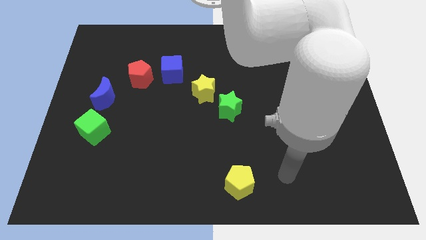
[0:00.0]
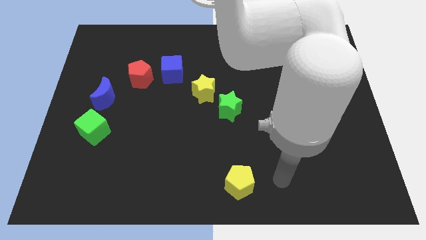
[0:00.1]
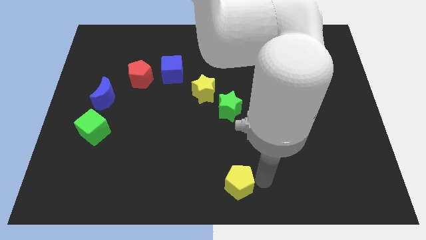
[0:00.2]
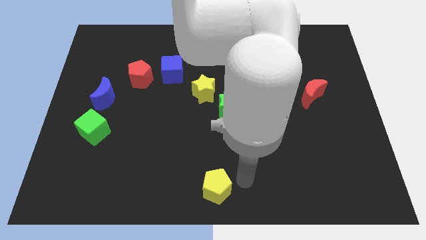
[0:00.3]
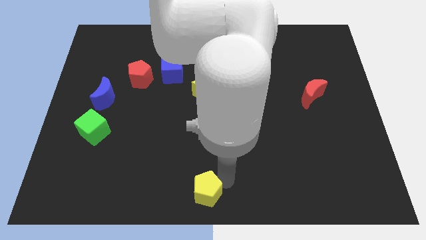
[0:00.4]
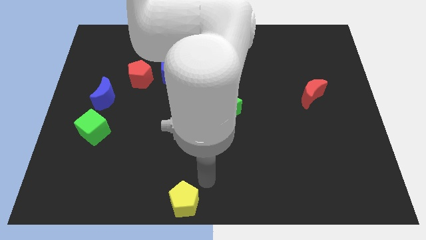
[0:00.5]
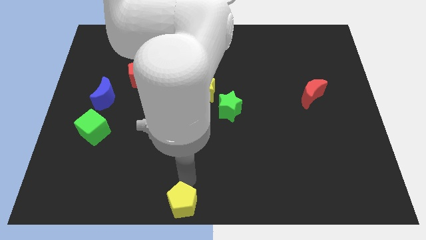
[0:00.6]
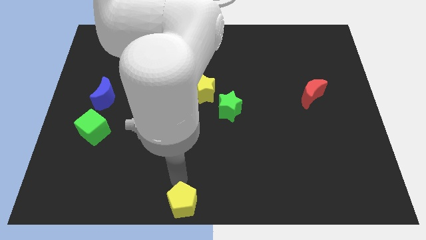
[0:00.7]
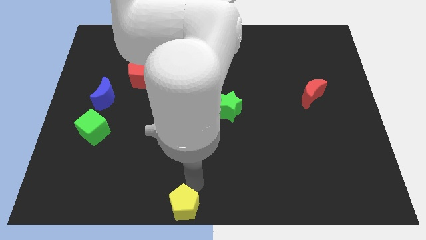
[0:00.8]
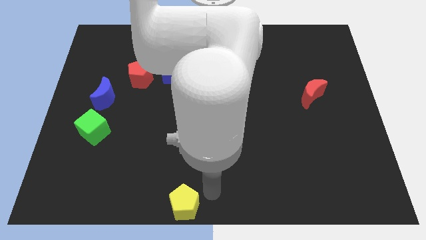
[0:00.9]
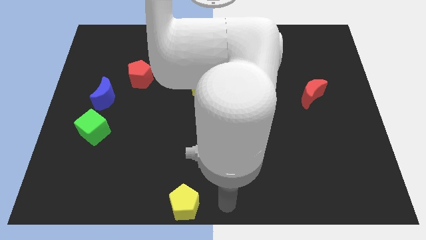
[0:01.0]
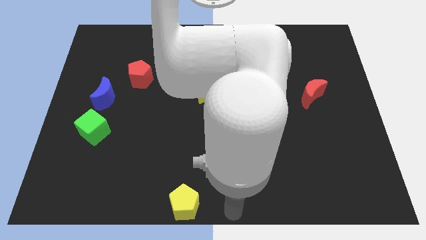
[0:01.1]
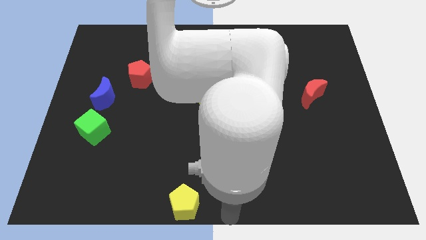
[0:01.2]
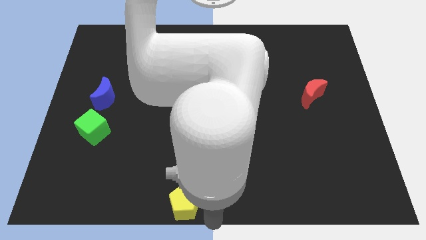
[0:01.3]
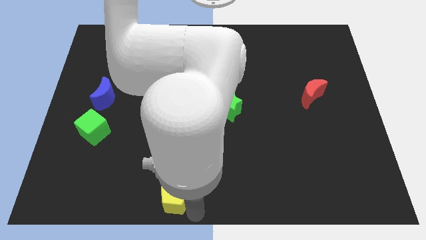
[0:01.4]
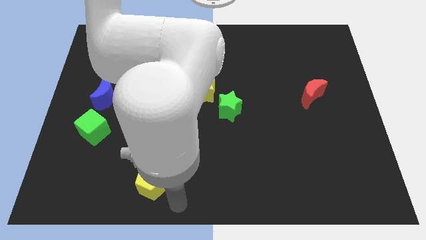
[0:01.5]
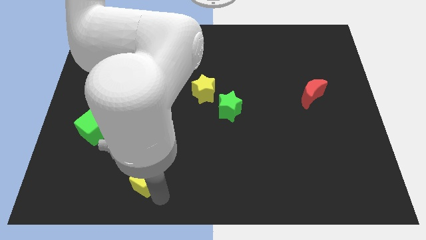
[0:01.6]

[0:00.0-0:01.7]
push the yellow pentagon to the left of the board

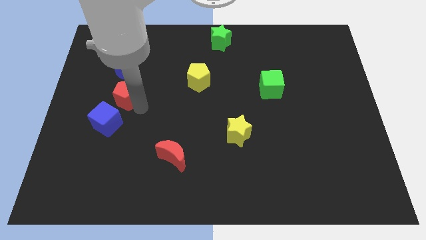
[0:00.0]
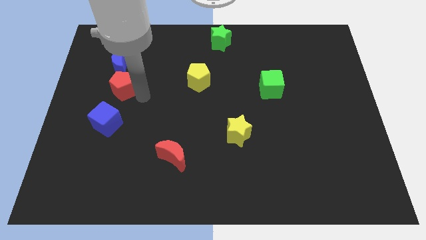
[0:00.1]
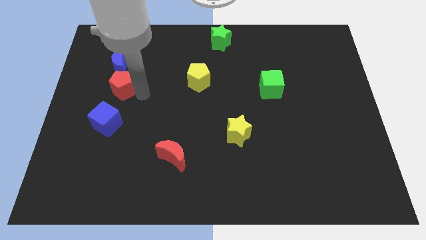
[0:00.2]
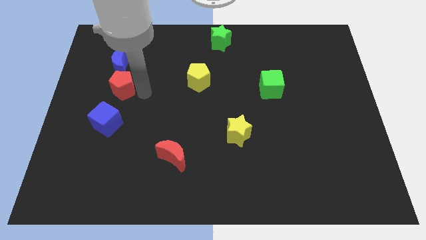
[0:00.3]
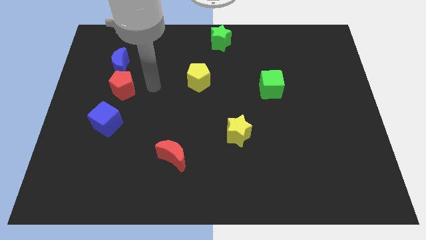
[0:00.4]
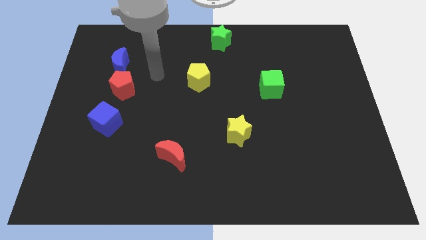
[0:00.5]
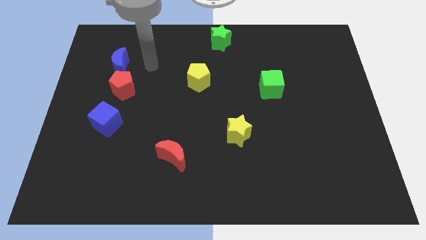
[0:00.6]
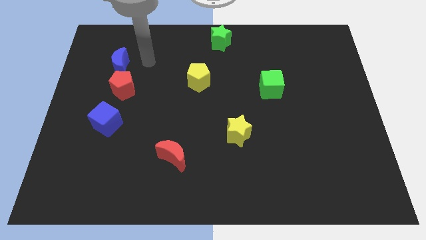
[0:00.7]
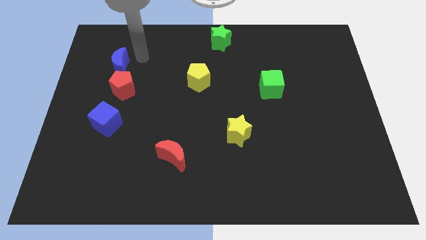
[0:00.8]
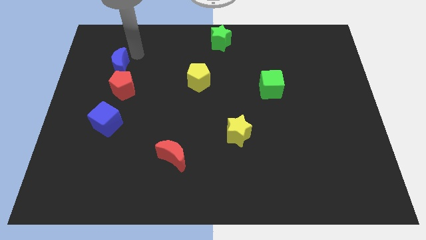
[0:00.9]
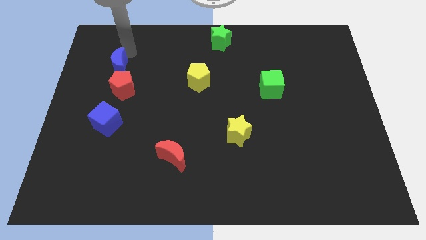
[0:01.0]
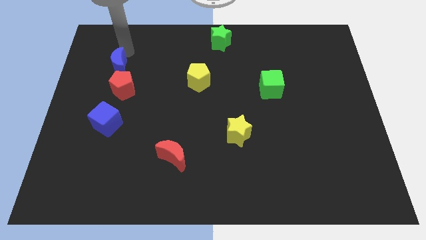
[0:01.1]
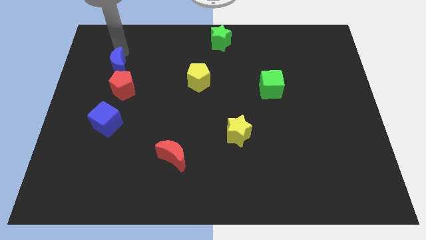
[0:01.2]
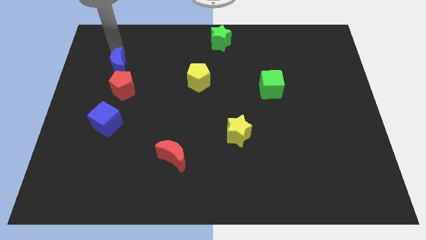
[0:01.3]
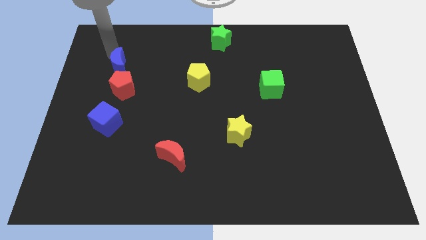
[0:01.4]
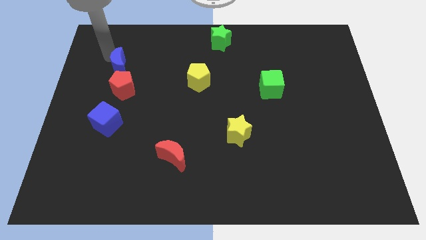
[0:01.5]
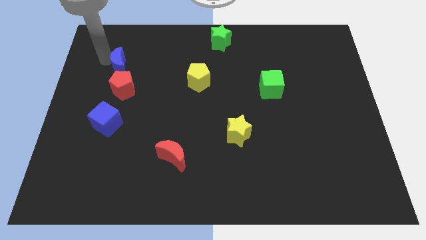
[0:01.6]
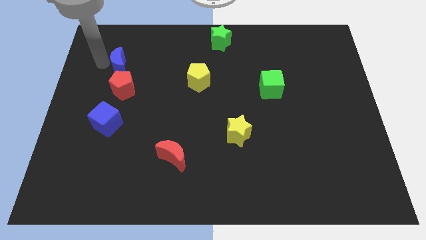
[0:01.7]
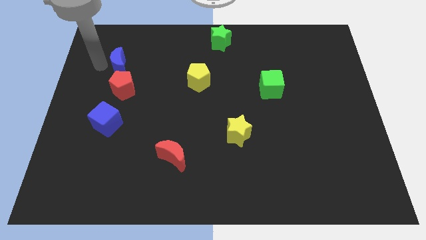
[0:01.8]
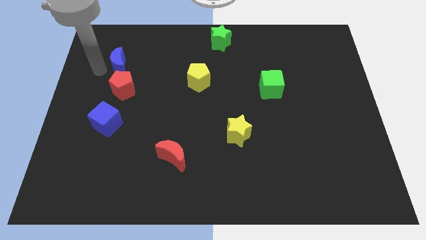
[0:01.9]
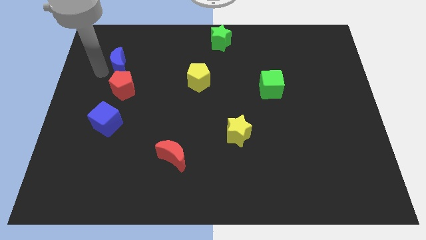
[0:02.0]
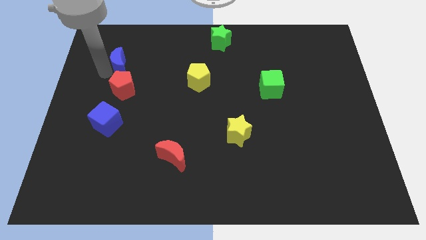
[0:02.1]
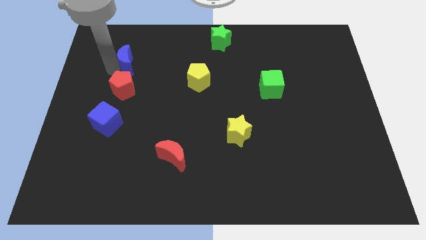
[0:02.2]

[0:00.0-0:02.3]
push the red pentagon into the blue moon

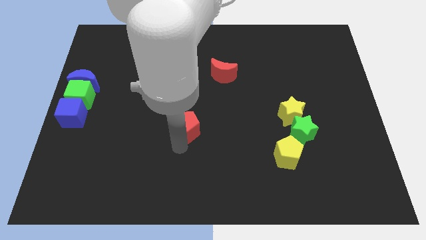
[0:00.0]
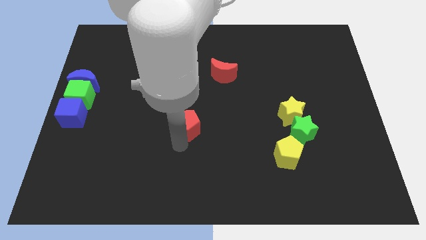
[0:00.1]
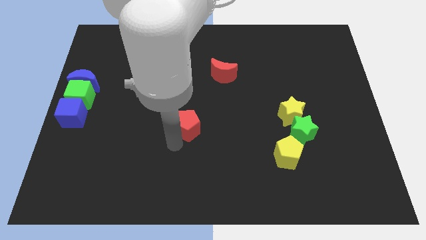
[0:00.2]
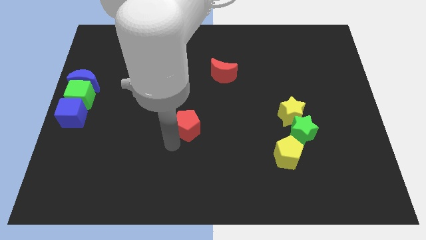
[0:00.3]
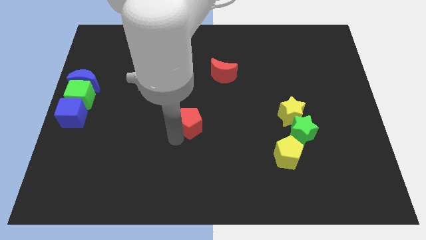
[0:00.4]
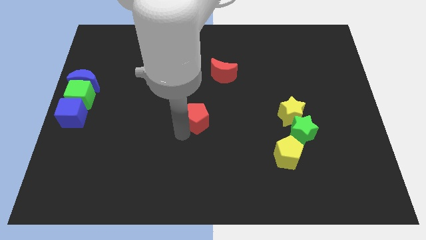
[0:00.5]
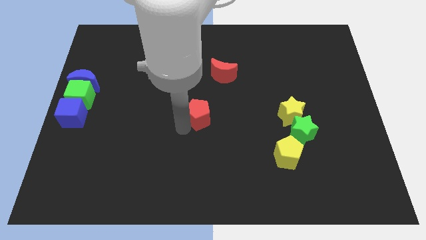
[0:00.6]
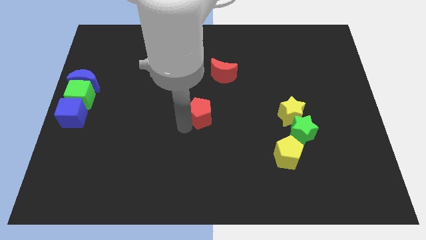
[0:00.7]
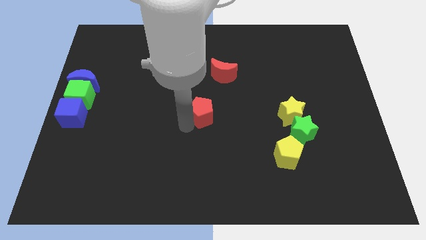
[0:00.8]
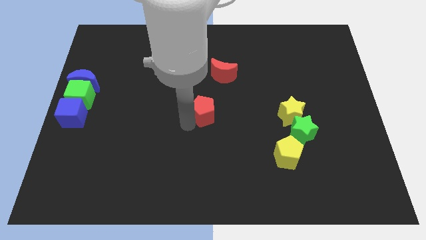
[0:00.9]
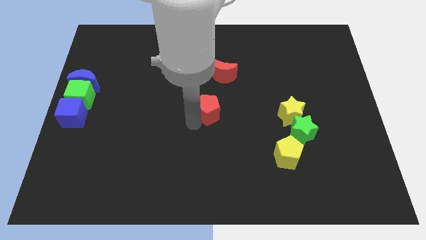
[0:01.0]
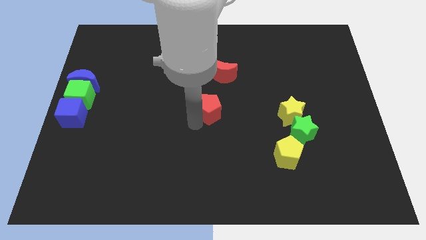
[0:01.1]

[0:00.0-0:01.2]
place the red pentagon left to the yellow star

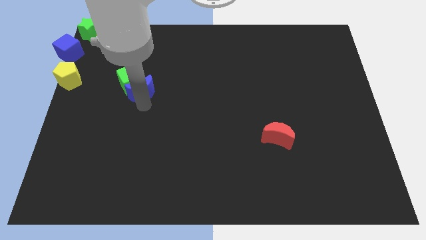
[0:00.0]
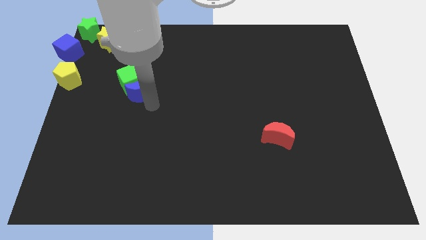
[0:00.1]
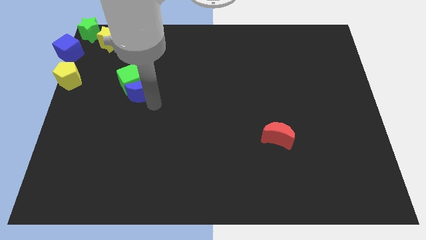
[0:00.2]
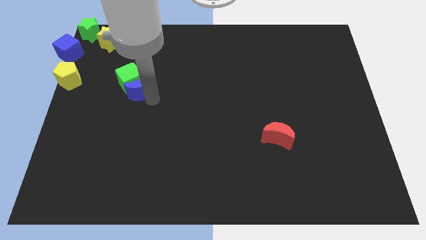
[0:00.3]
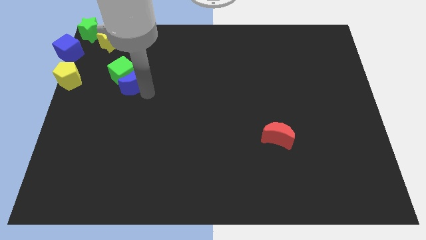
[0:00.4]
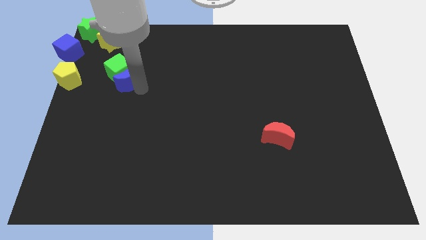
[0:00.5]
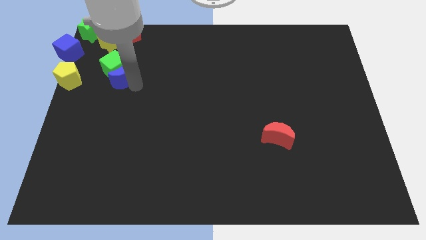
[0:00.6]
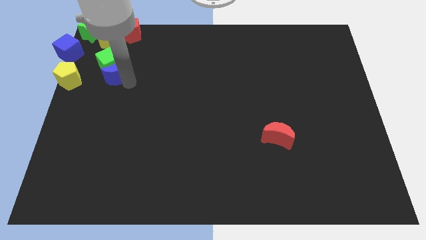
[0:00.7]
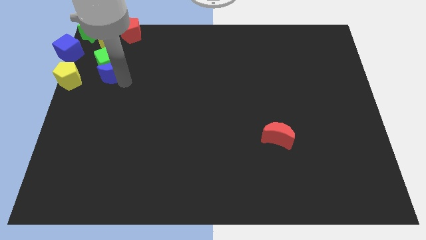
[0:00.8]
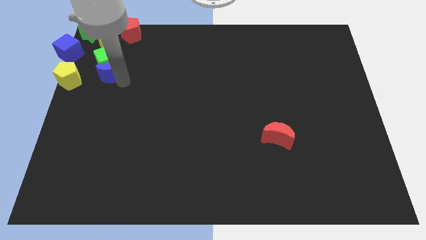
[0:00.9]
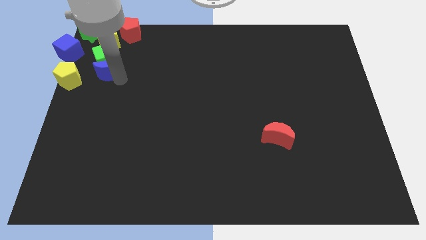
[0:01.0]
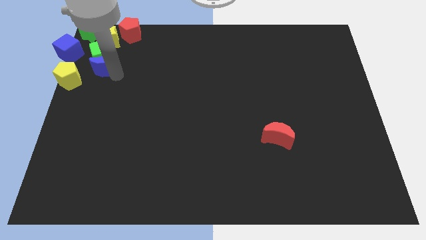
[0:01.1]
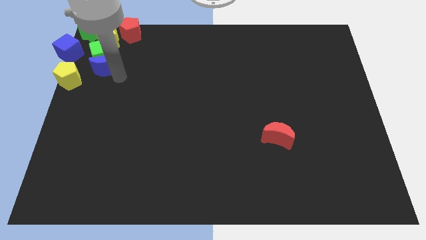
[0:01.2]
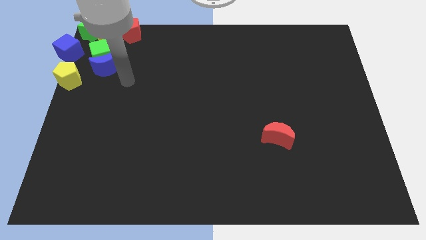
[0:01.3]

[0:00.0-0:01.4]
place the blue moon and green cube at the bottom of yellow star

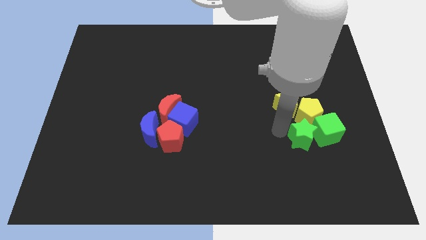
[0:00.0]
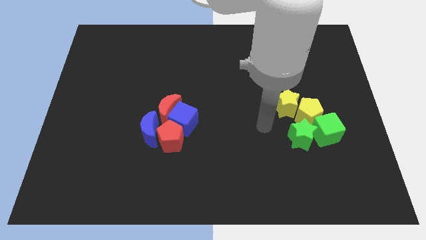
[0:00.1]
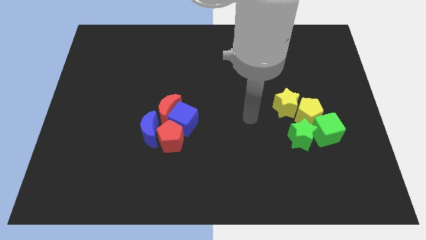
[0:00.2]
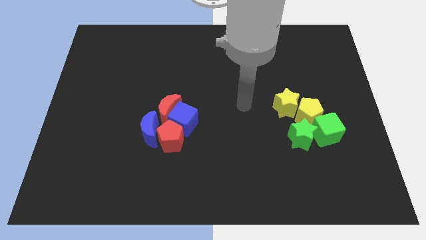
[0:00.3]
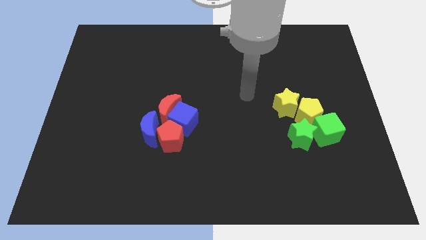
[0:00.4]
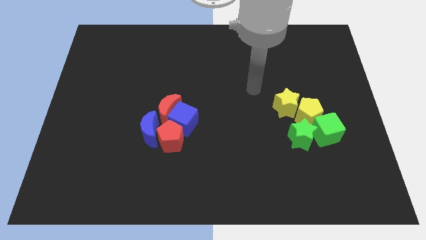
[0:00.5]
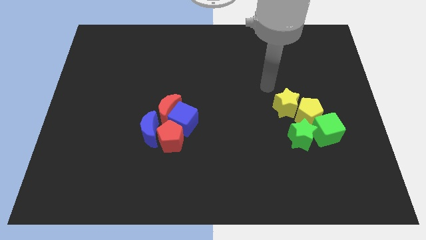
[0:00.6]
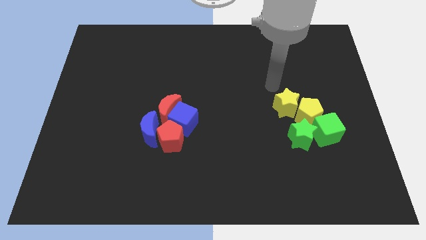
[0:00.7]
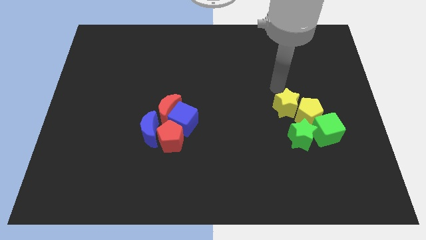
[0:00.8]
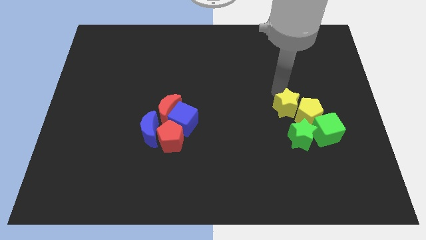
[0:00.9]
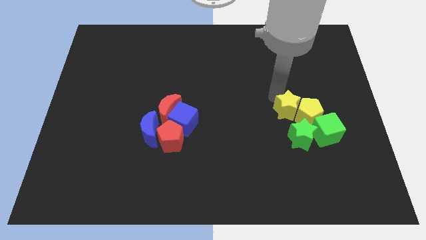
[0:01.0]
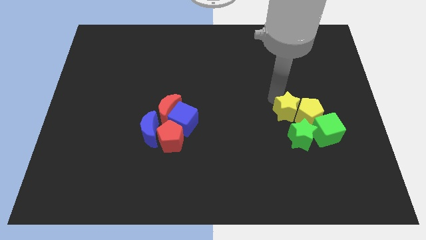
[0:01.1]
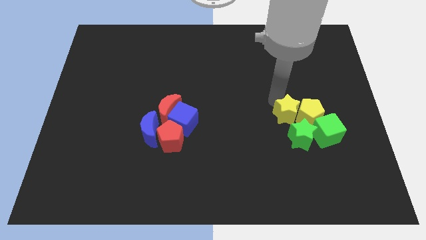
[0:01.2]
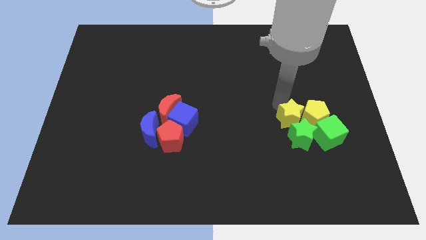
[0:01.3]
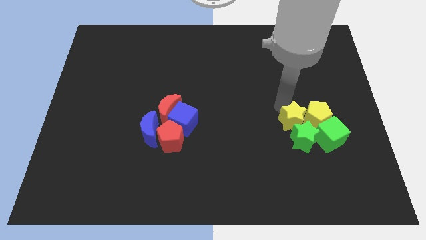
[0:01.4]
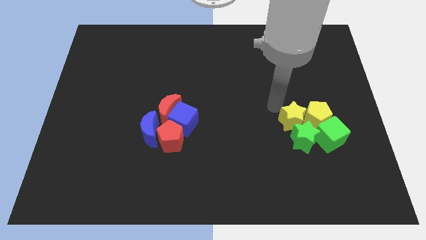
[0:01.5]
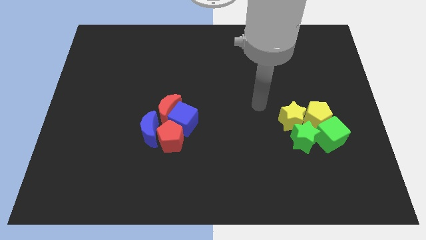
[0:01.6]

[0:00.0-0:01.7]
move the yellow star slightly to the green star

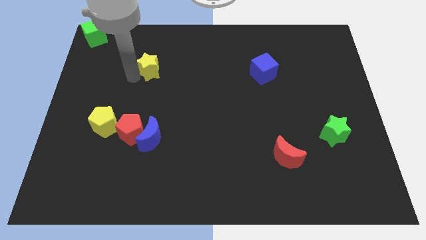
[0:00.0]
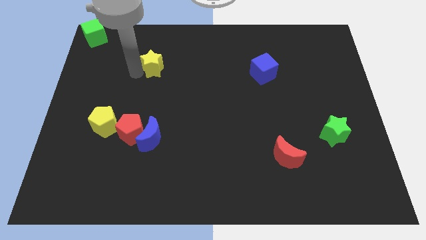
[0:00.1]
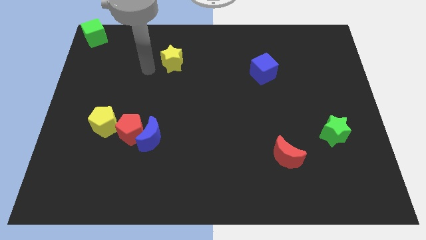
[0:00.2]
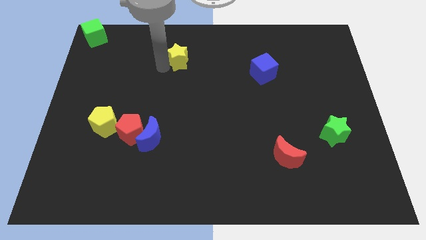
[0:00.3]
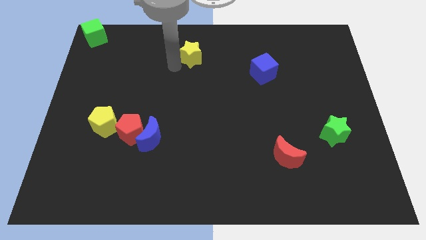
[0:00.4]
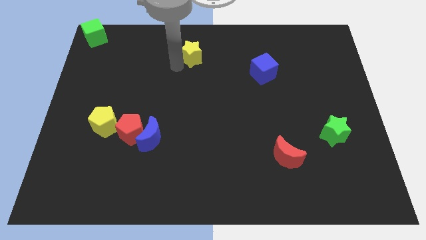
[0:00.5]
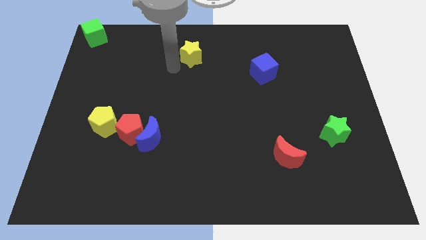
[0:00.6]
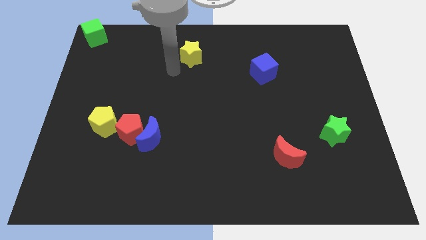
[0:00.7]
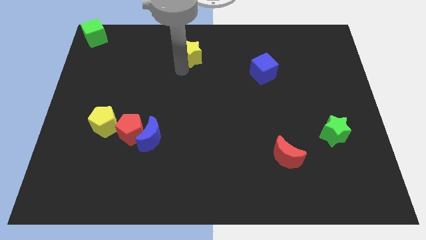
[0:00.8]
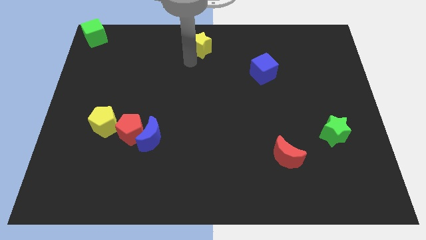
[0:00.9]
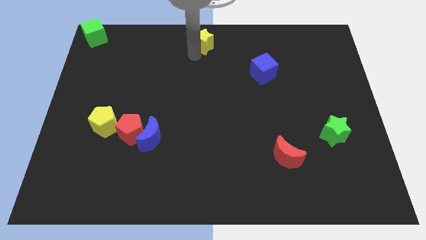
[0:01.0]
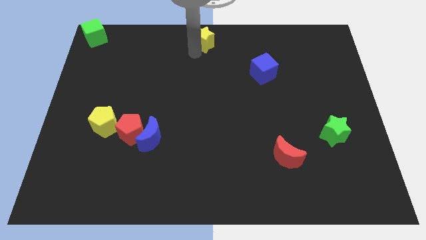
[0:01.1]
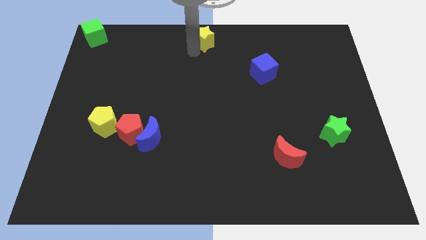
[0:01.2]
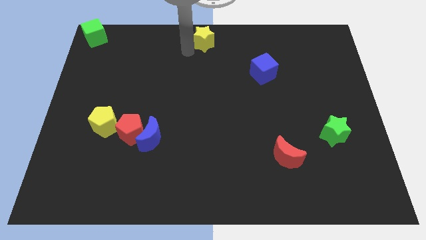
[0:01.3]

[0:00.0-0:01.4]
push the yellow star to the top center of the board
